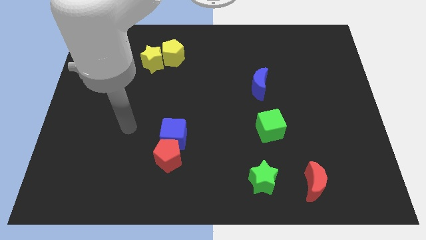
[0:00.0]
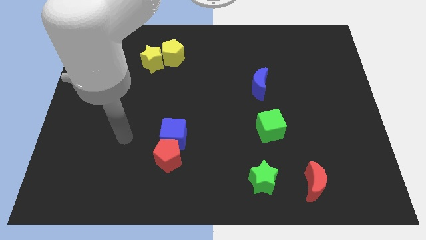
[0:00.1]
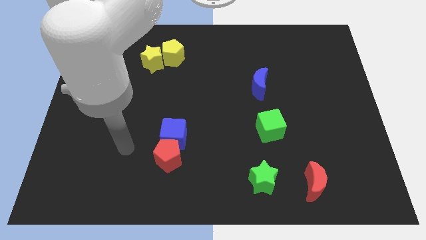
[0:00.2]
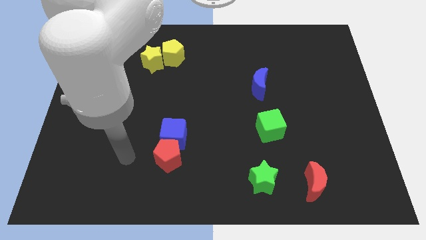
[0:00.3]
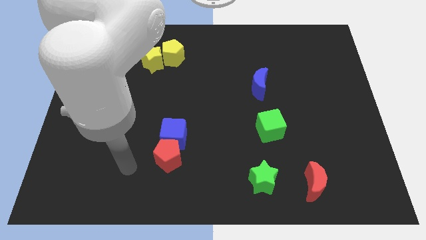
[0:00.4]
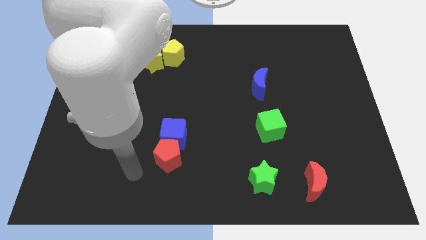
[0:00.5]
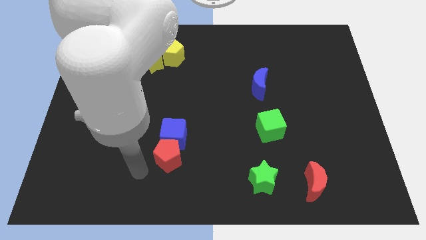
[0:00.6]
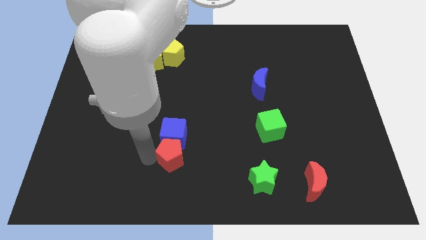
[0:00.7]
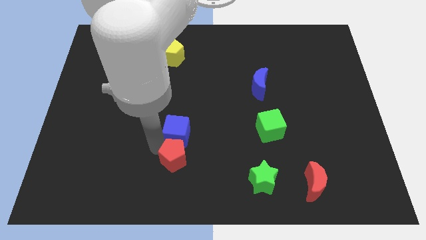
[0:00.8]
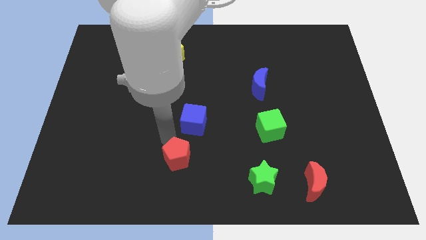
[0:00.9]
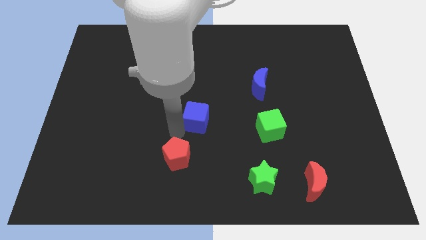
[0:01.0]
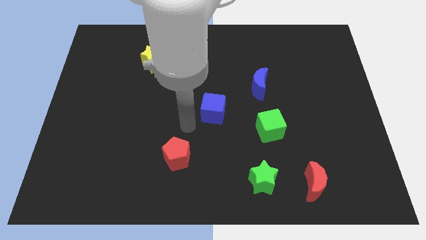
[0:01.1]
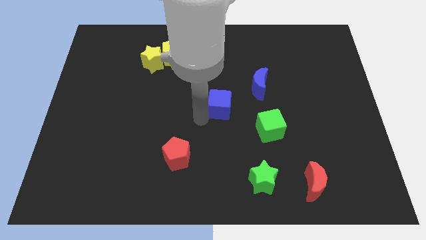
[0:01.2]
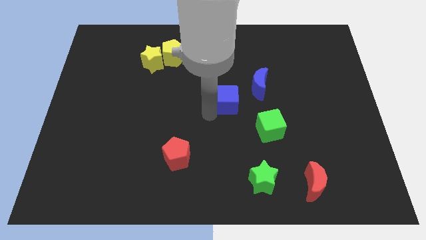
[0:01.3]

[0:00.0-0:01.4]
move the blue cube away from the red pentagon

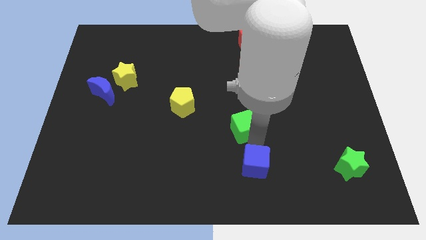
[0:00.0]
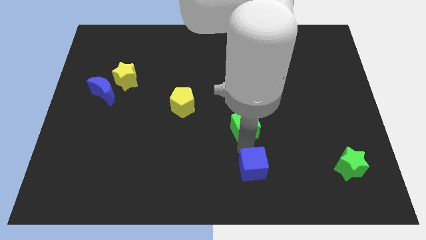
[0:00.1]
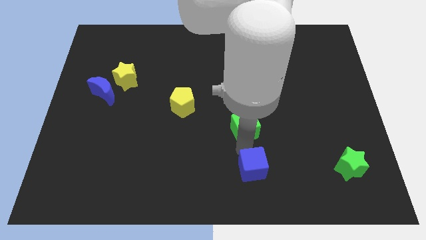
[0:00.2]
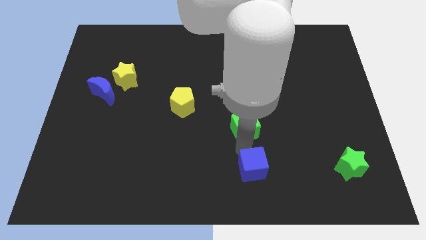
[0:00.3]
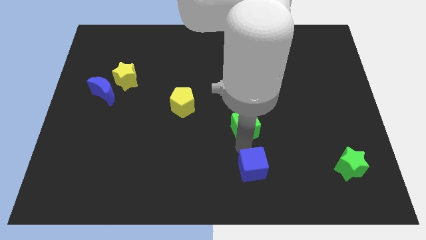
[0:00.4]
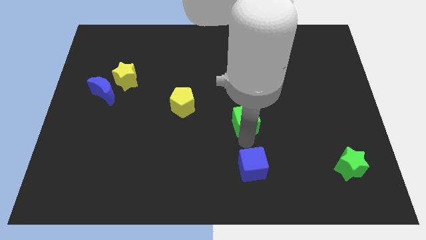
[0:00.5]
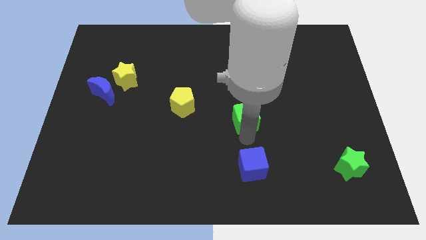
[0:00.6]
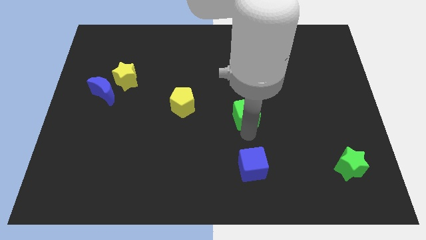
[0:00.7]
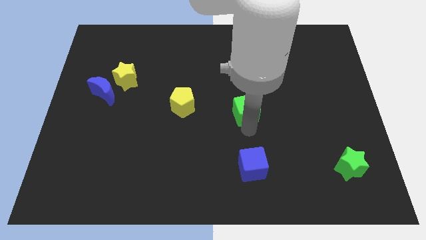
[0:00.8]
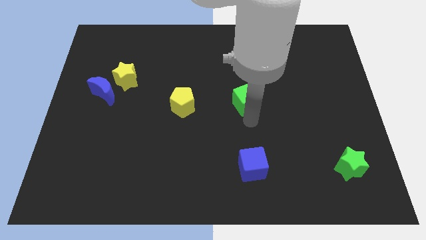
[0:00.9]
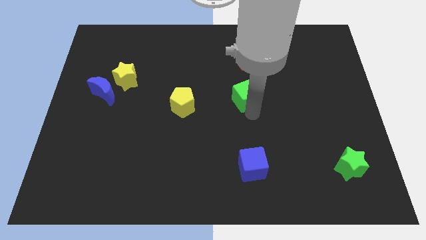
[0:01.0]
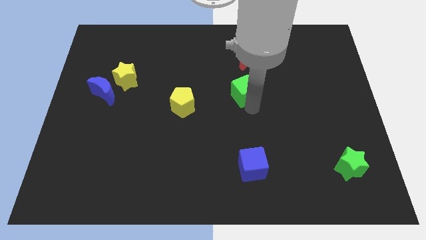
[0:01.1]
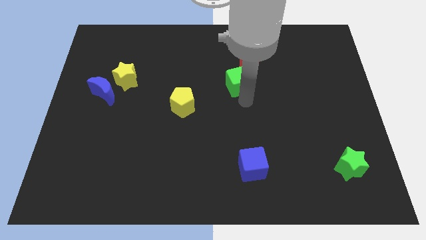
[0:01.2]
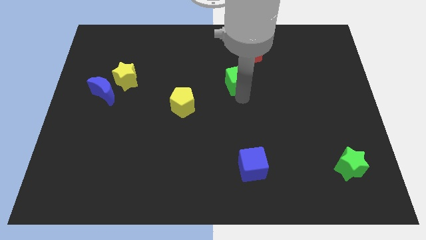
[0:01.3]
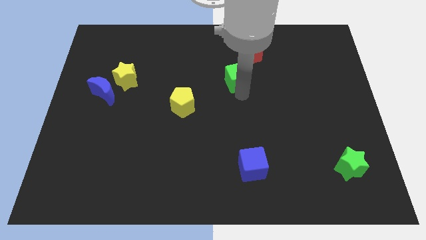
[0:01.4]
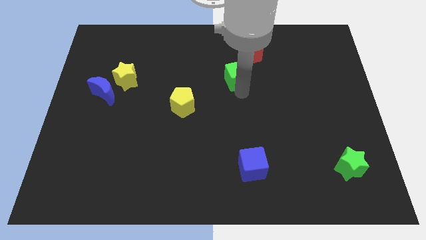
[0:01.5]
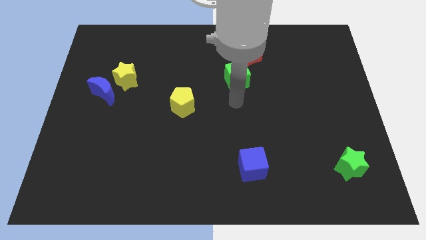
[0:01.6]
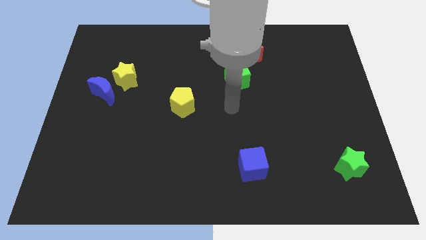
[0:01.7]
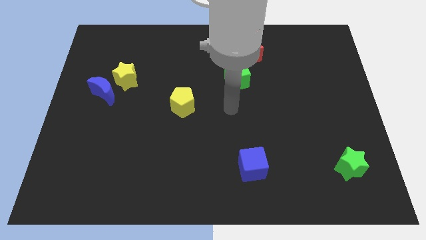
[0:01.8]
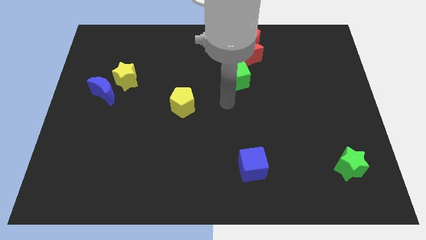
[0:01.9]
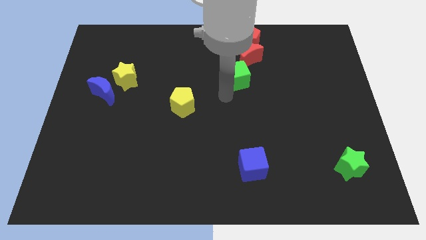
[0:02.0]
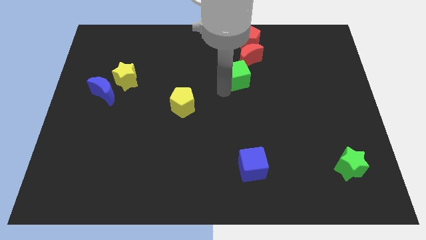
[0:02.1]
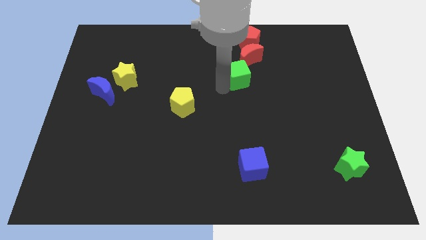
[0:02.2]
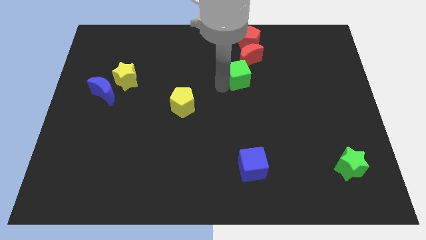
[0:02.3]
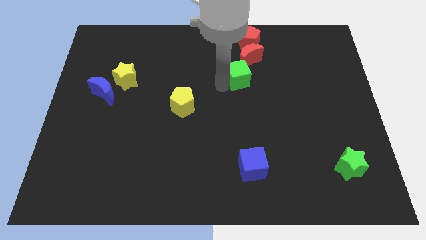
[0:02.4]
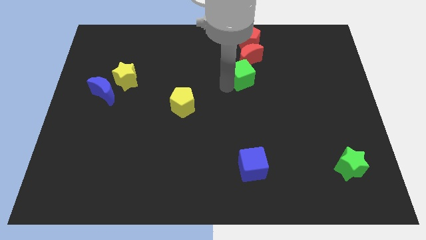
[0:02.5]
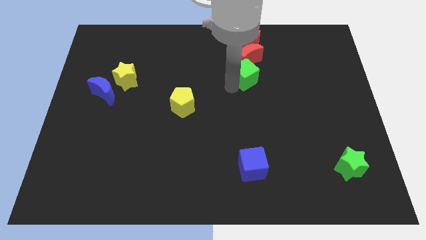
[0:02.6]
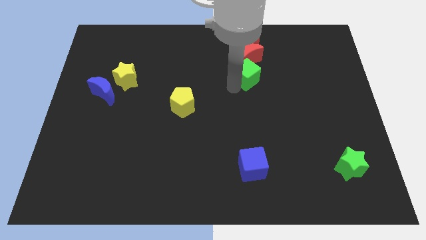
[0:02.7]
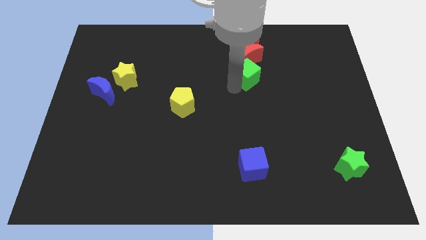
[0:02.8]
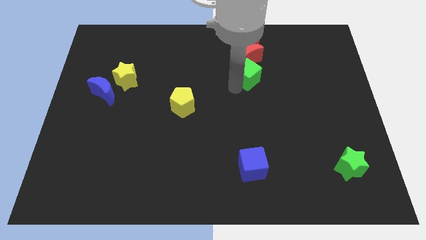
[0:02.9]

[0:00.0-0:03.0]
place the green cube vertically below the red moon

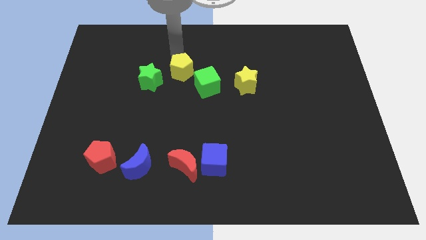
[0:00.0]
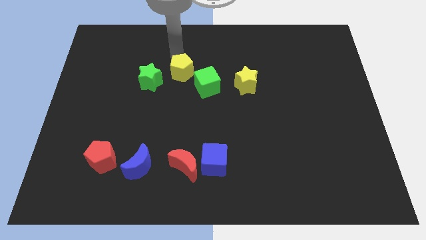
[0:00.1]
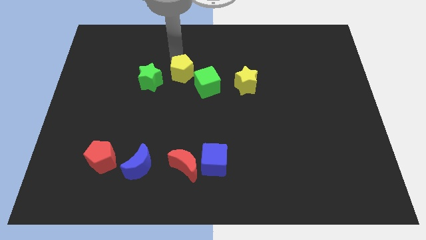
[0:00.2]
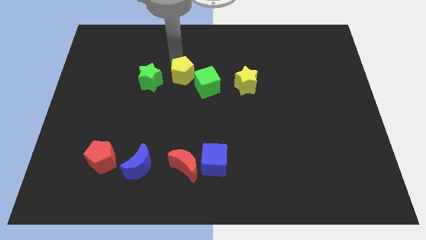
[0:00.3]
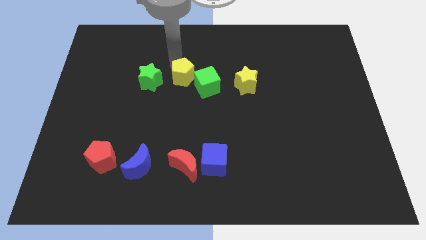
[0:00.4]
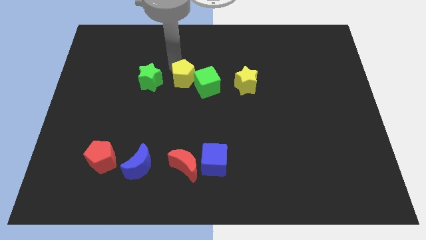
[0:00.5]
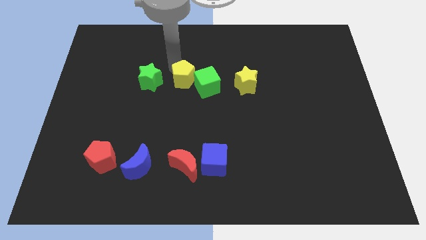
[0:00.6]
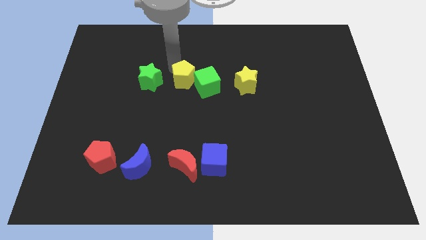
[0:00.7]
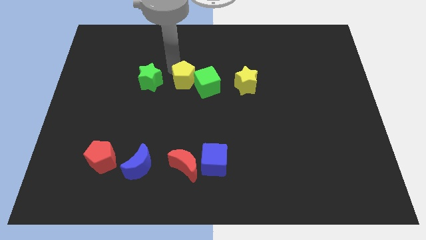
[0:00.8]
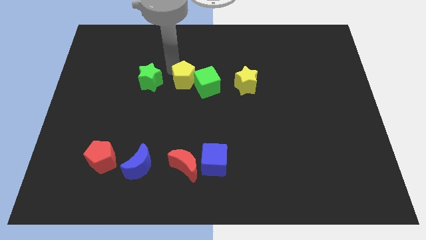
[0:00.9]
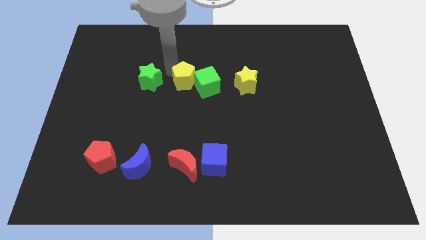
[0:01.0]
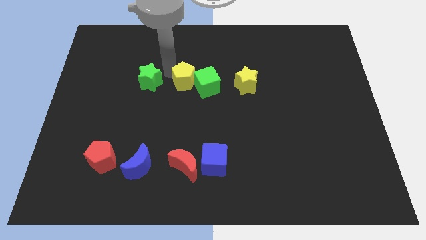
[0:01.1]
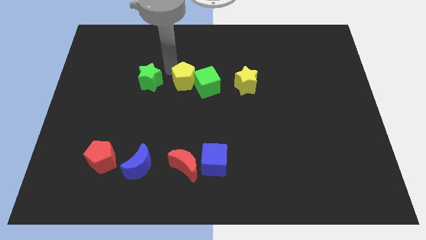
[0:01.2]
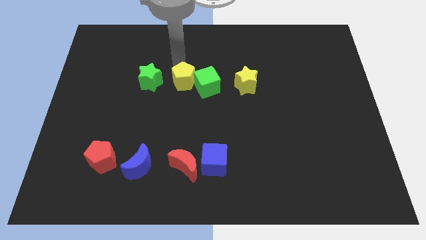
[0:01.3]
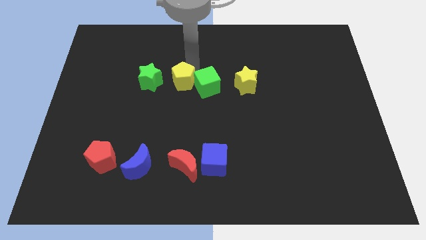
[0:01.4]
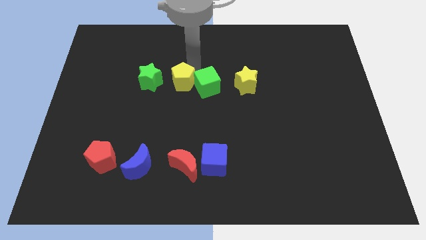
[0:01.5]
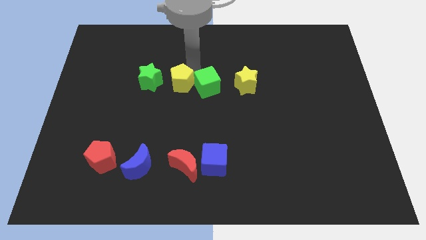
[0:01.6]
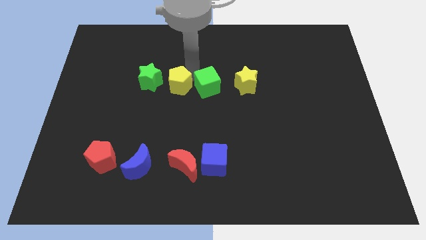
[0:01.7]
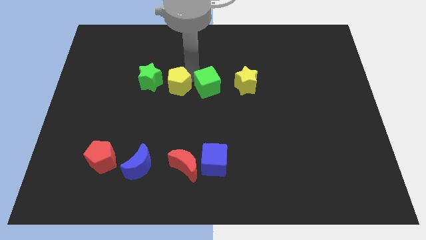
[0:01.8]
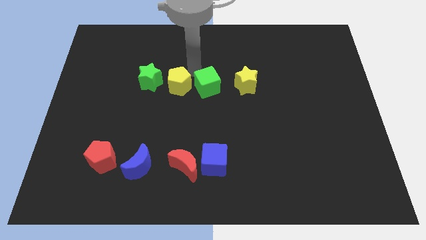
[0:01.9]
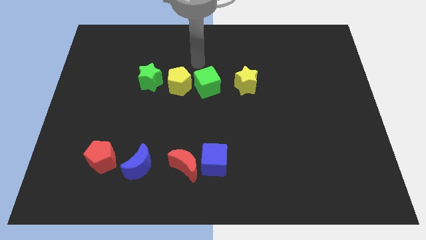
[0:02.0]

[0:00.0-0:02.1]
place the yellow pentagon to the right of the green star

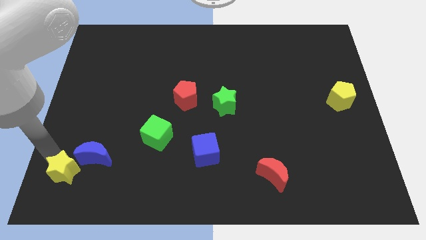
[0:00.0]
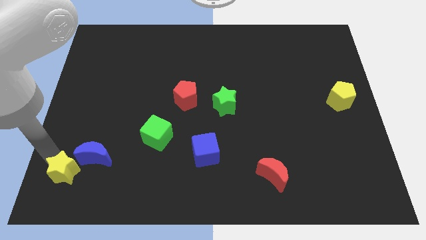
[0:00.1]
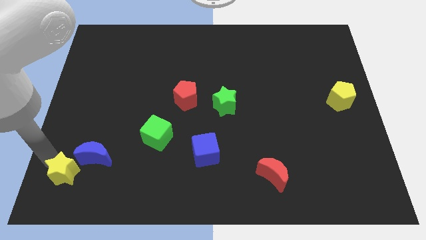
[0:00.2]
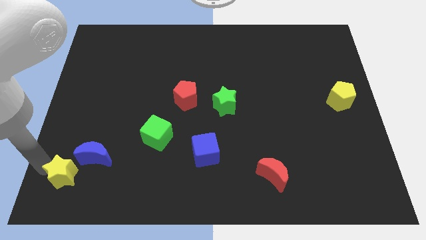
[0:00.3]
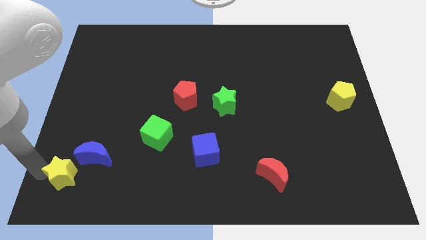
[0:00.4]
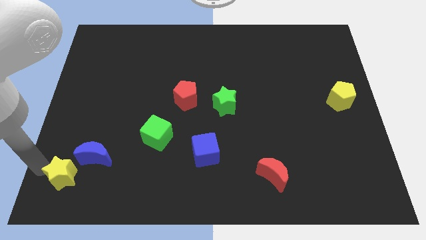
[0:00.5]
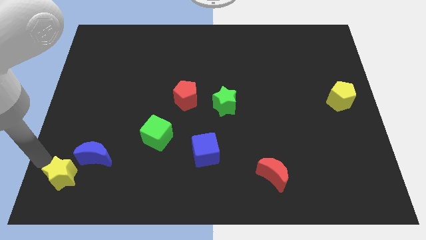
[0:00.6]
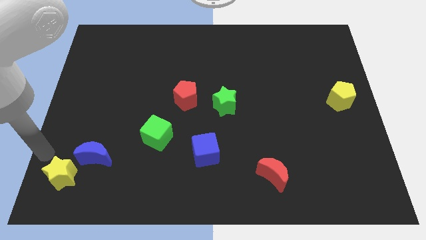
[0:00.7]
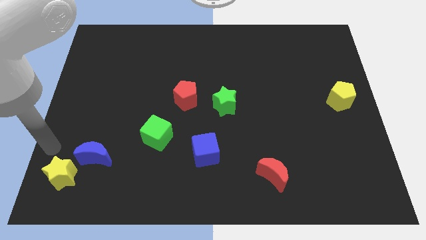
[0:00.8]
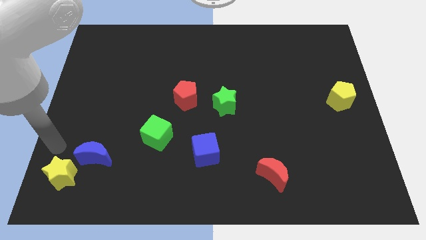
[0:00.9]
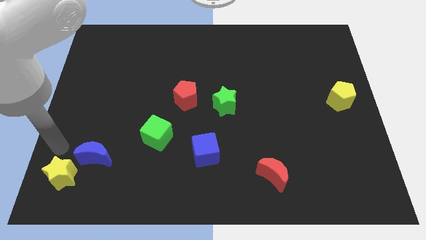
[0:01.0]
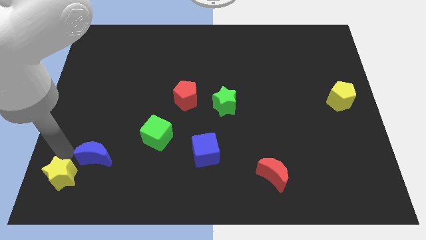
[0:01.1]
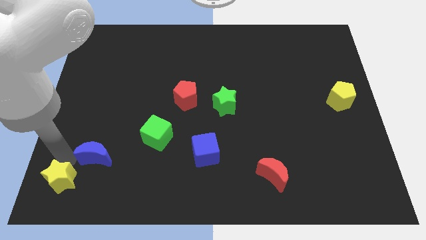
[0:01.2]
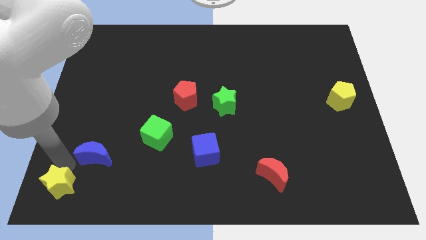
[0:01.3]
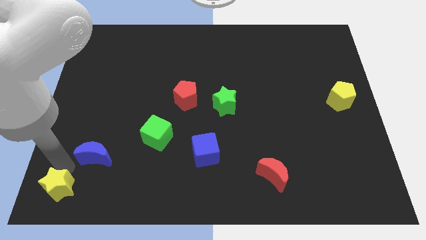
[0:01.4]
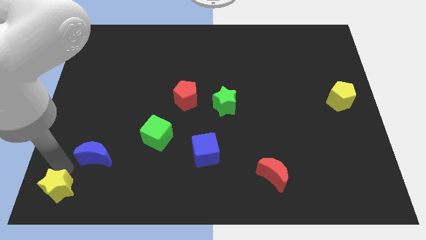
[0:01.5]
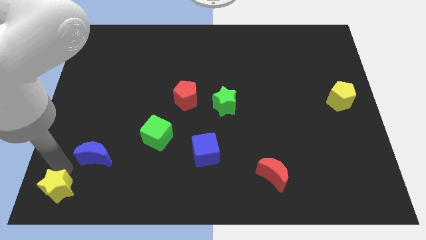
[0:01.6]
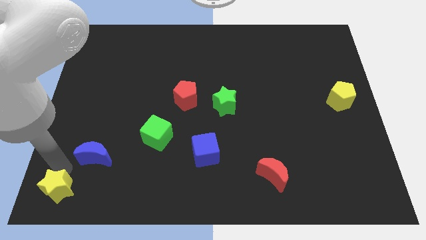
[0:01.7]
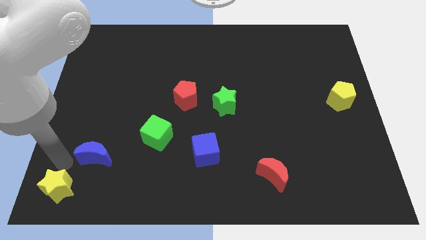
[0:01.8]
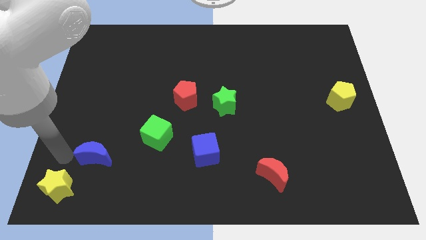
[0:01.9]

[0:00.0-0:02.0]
push the yellow star to the bottom side

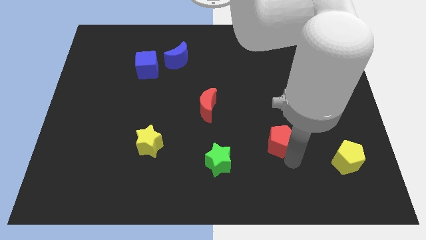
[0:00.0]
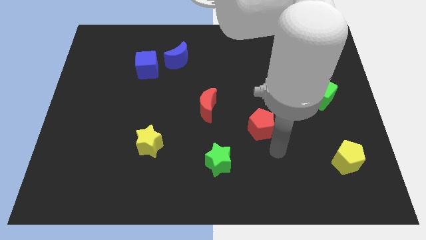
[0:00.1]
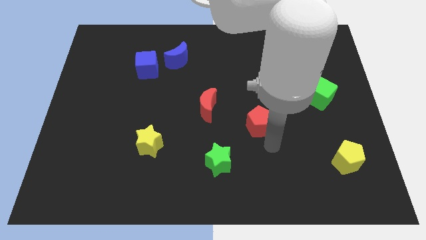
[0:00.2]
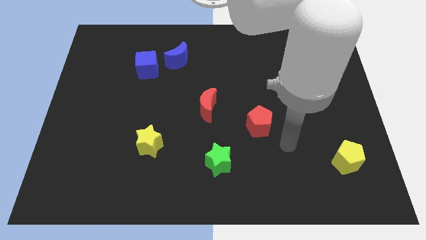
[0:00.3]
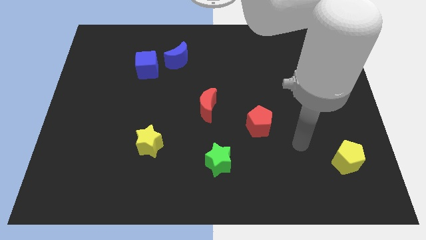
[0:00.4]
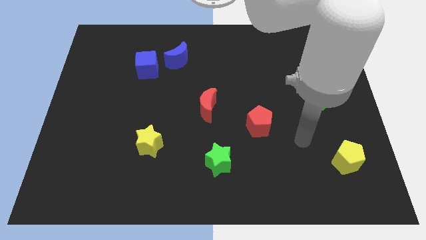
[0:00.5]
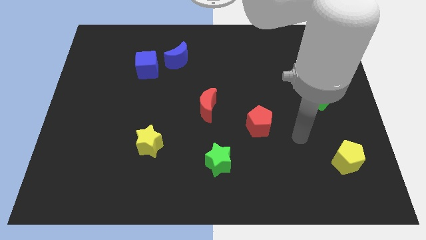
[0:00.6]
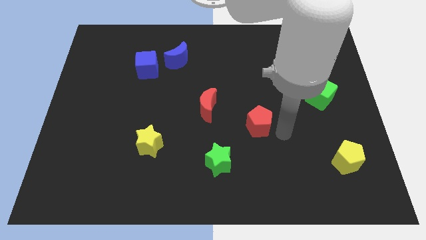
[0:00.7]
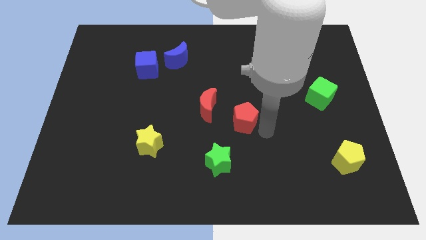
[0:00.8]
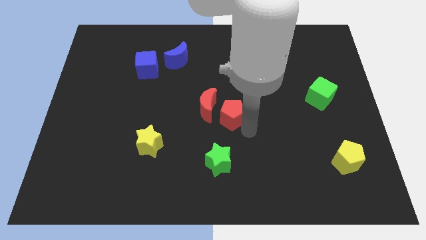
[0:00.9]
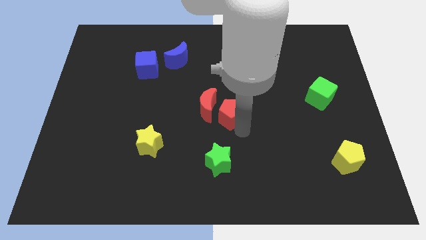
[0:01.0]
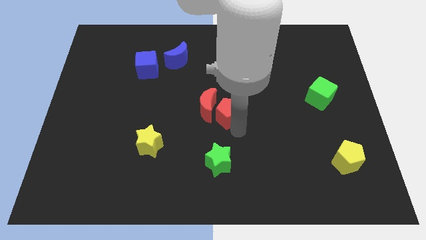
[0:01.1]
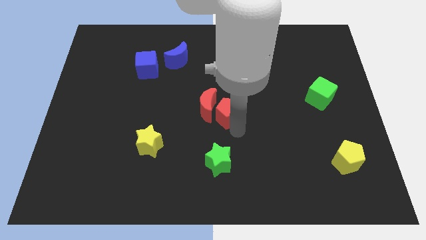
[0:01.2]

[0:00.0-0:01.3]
push the red pentagon to the right of the red crescent
